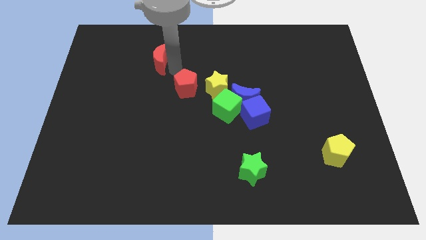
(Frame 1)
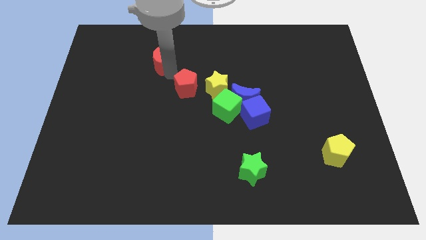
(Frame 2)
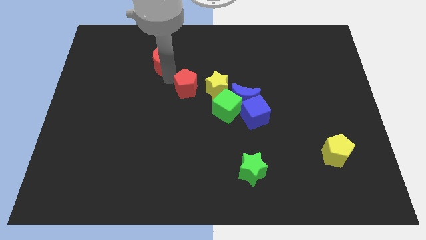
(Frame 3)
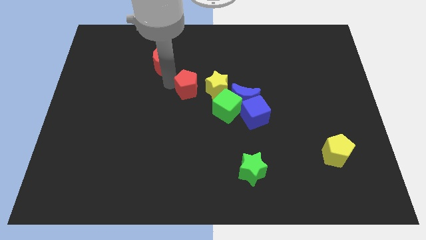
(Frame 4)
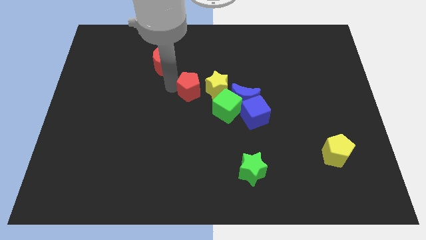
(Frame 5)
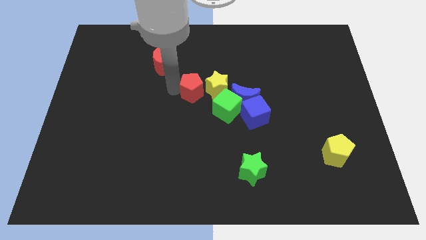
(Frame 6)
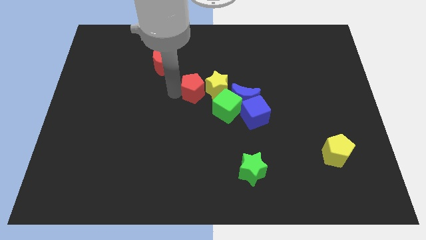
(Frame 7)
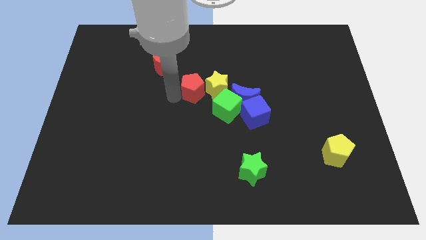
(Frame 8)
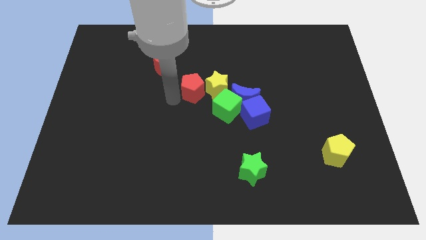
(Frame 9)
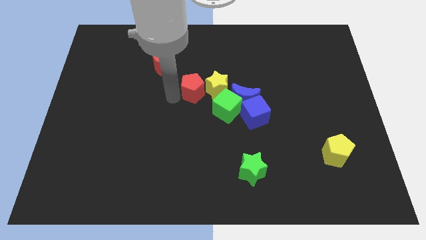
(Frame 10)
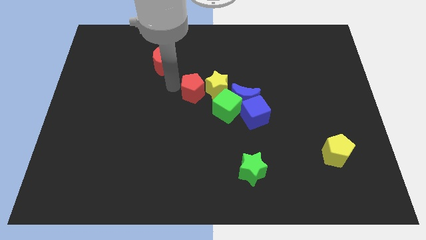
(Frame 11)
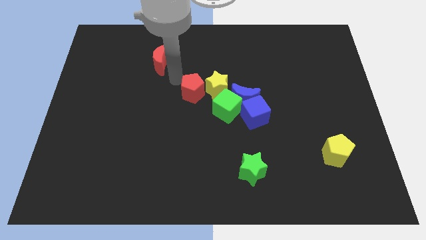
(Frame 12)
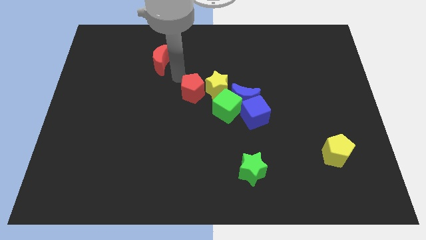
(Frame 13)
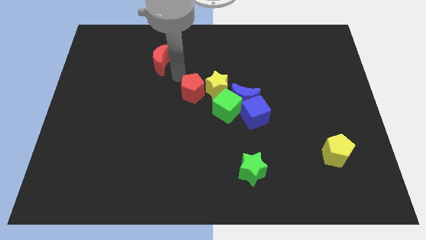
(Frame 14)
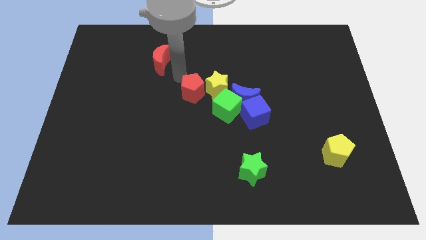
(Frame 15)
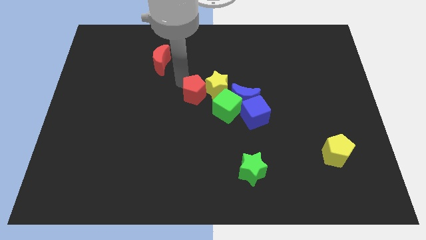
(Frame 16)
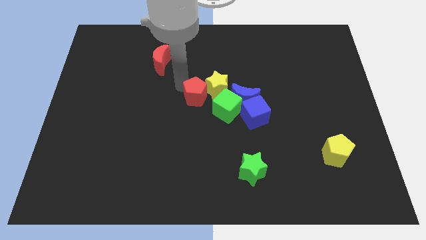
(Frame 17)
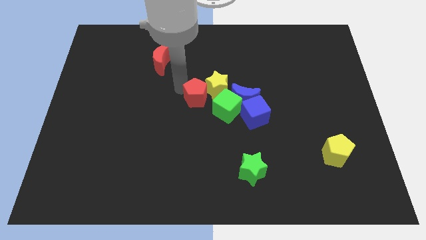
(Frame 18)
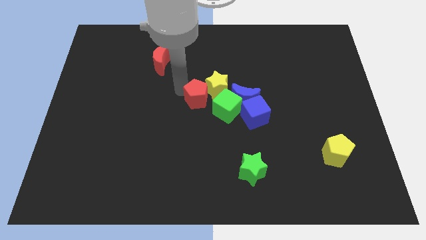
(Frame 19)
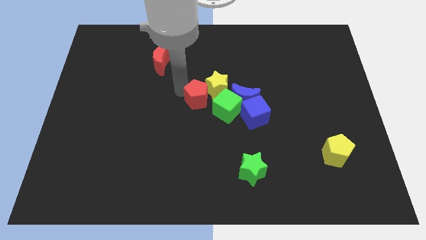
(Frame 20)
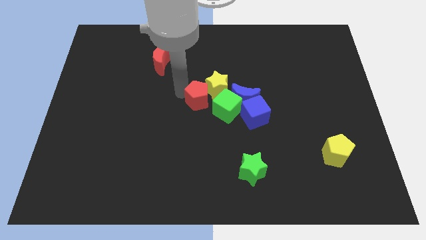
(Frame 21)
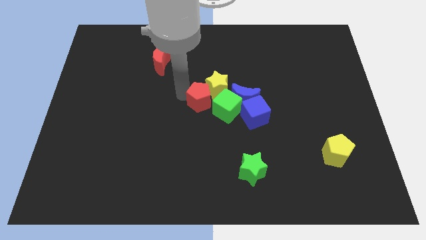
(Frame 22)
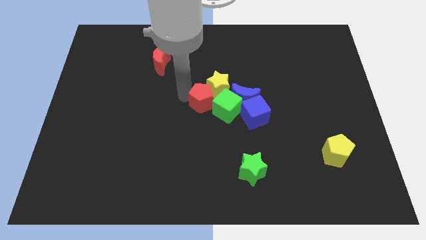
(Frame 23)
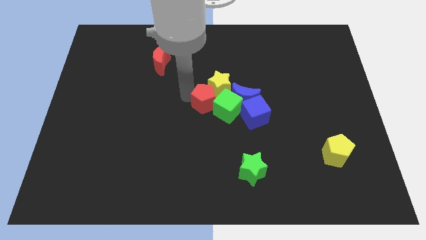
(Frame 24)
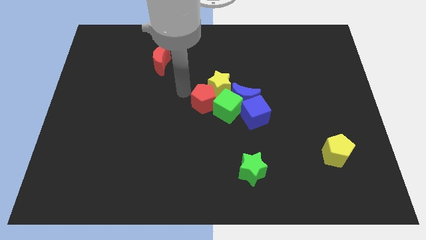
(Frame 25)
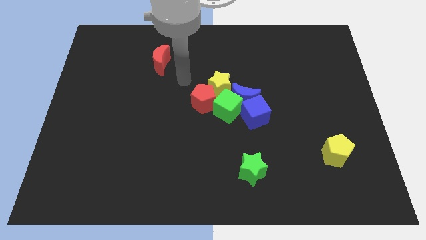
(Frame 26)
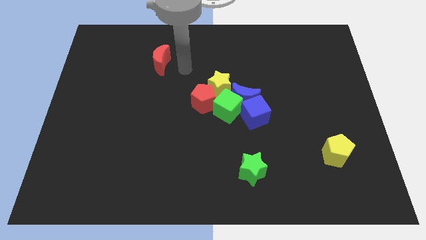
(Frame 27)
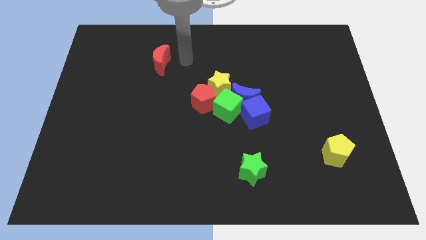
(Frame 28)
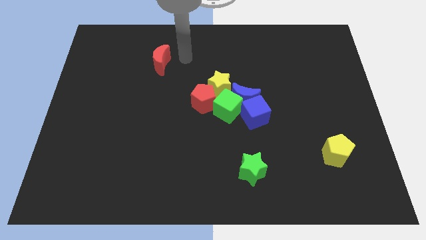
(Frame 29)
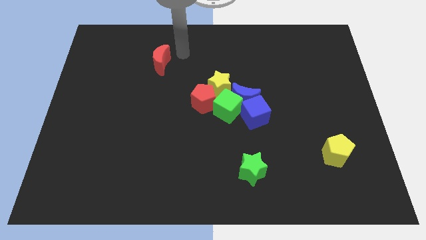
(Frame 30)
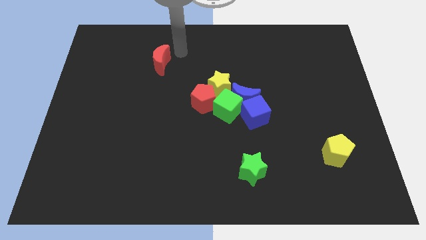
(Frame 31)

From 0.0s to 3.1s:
move the red pentagon to the center of the board

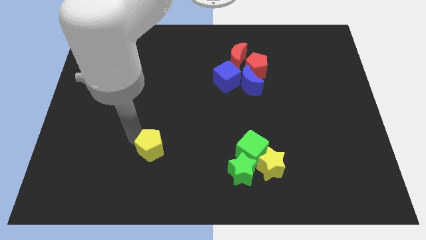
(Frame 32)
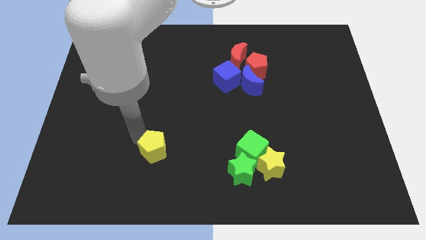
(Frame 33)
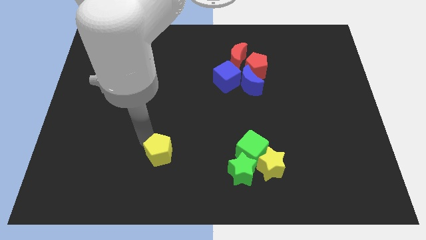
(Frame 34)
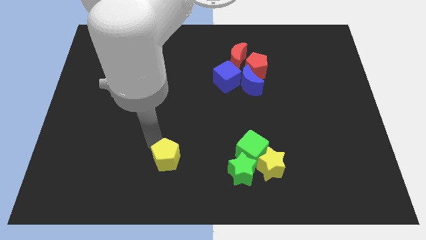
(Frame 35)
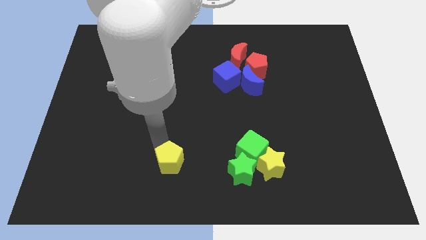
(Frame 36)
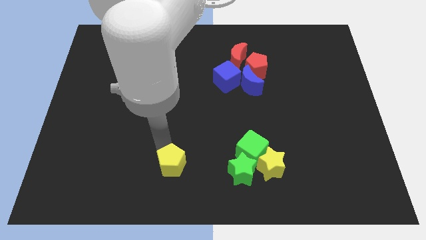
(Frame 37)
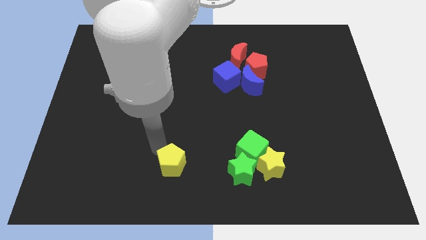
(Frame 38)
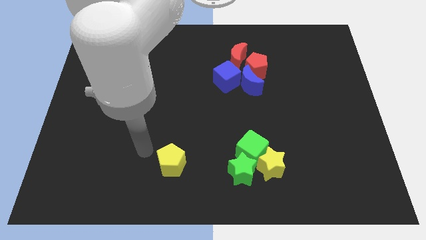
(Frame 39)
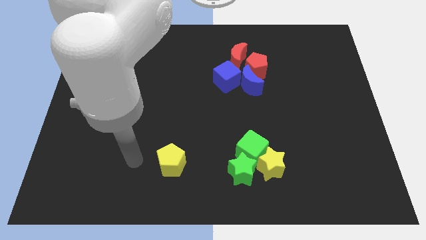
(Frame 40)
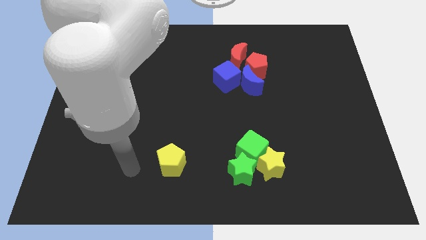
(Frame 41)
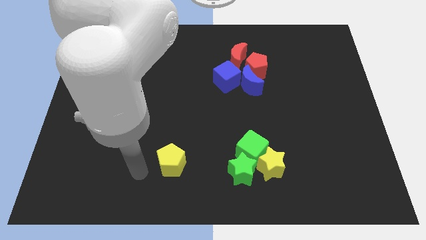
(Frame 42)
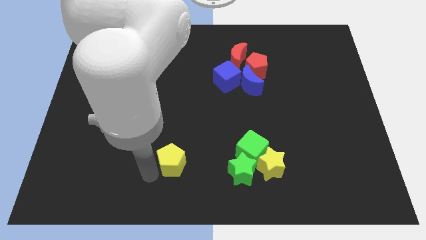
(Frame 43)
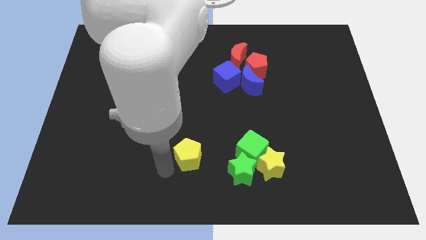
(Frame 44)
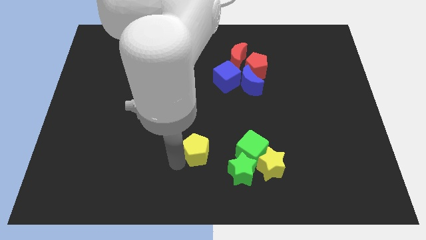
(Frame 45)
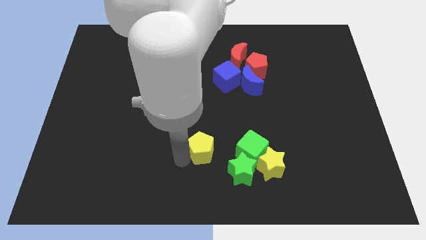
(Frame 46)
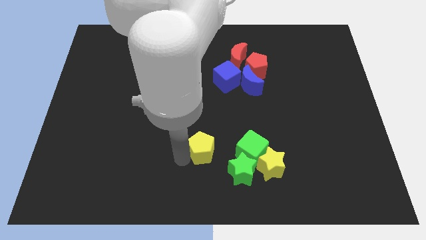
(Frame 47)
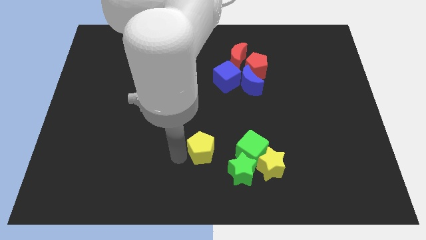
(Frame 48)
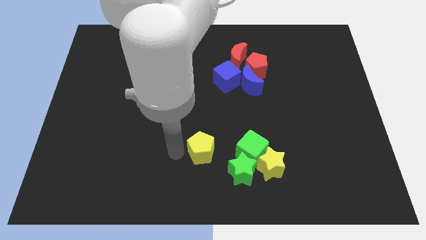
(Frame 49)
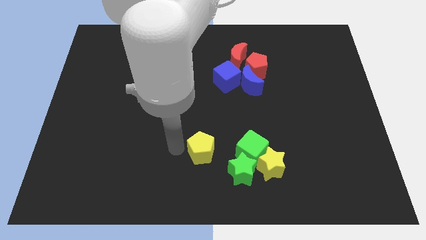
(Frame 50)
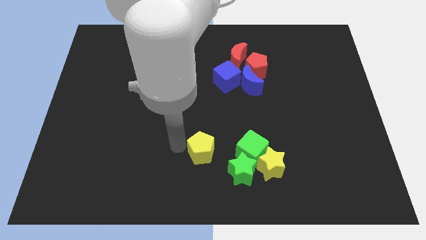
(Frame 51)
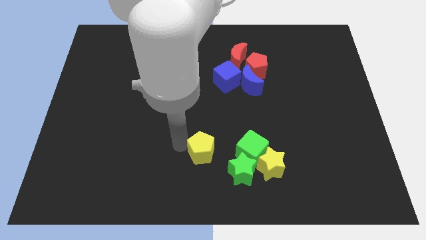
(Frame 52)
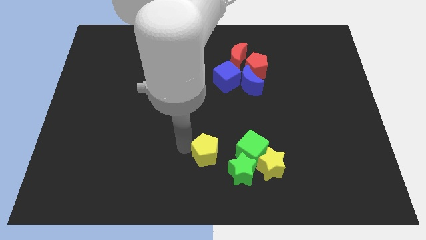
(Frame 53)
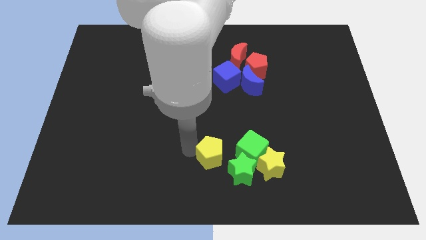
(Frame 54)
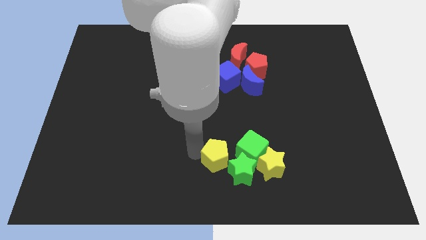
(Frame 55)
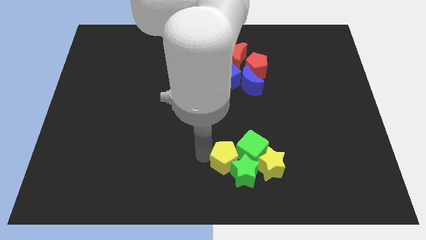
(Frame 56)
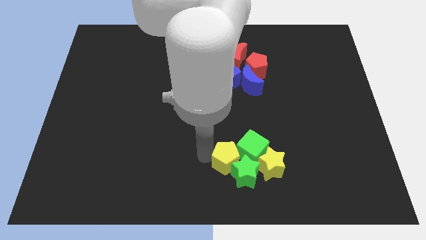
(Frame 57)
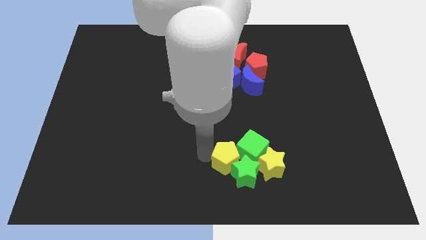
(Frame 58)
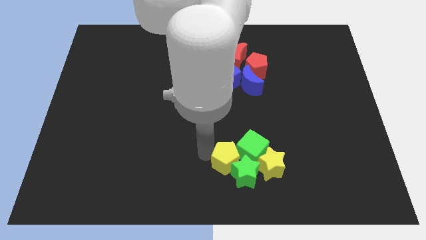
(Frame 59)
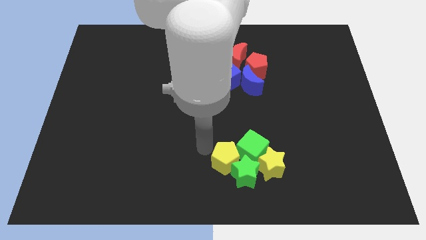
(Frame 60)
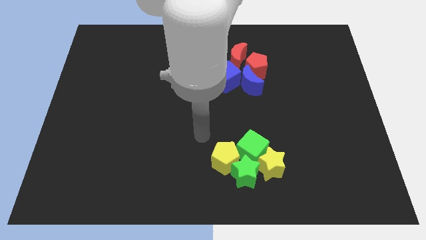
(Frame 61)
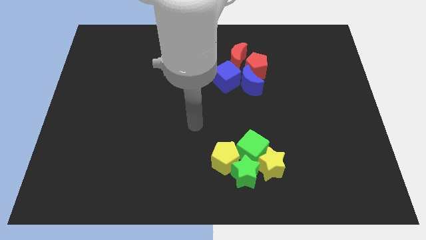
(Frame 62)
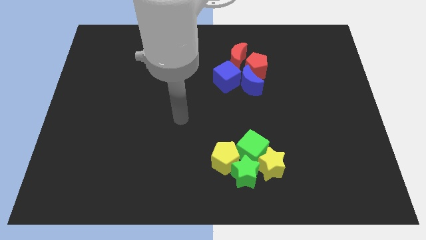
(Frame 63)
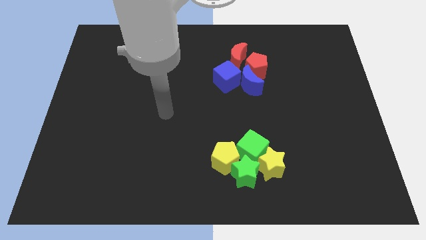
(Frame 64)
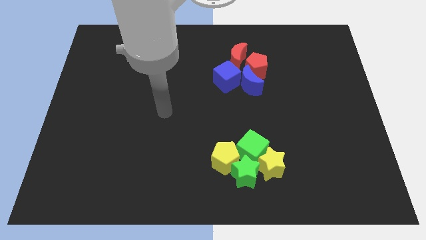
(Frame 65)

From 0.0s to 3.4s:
push yellow pentagon into the group of blocks

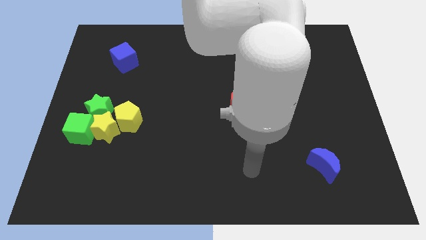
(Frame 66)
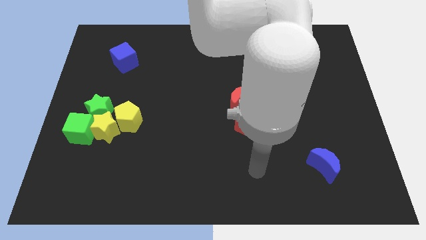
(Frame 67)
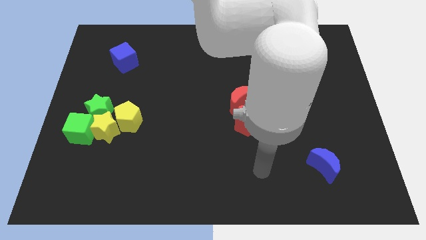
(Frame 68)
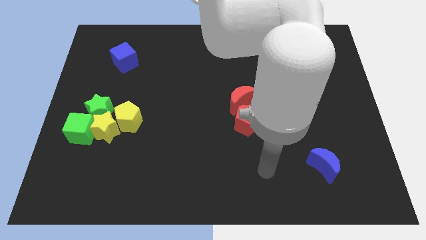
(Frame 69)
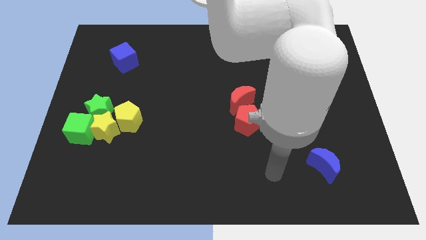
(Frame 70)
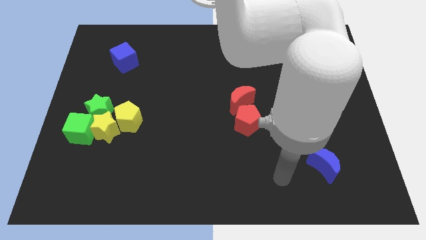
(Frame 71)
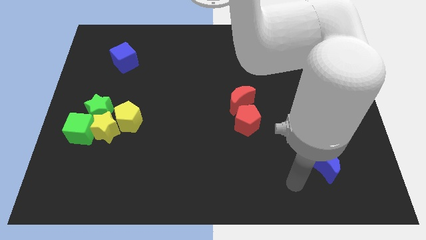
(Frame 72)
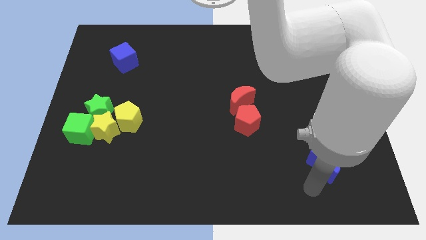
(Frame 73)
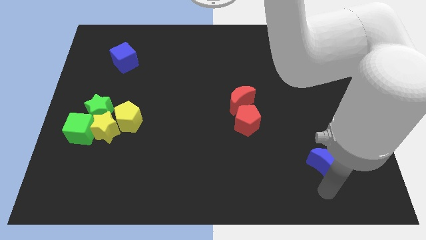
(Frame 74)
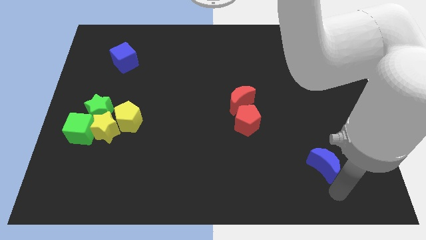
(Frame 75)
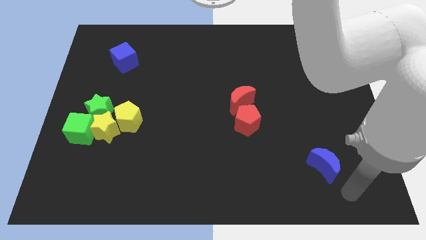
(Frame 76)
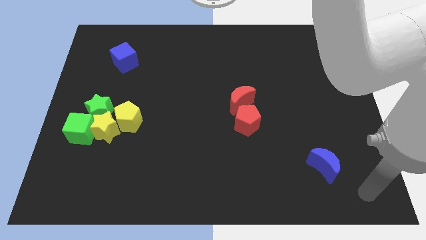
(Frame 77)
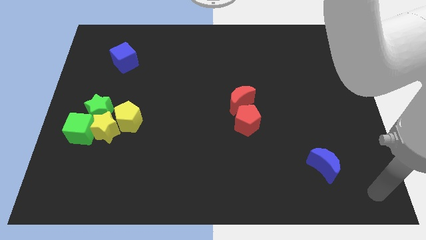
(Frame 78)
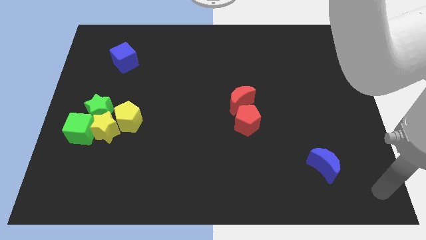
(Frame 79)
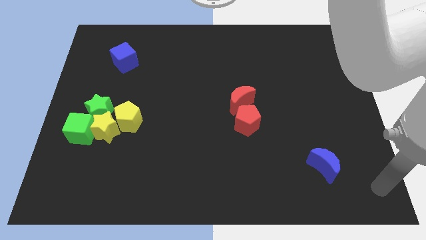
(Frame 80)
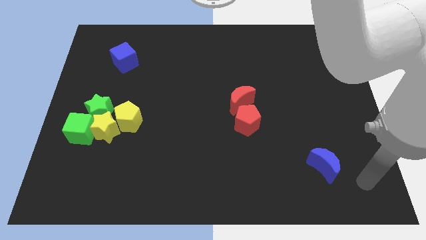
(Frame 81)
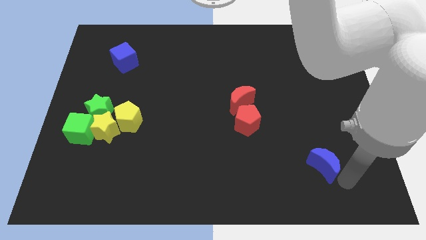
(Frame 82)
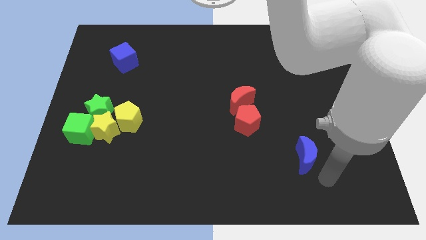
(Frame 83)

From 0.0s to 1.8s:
slightly push the blue crescent

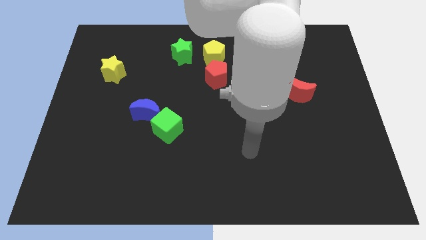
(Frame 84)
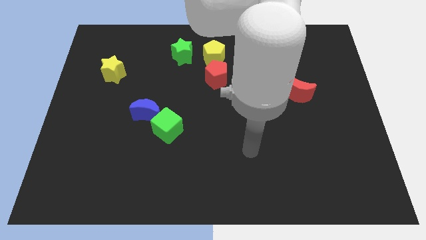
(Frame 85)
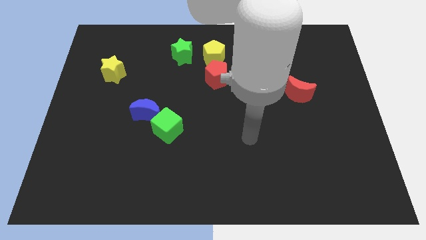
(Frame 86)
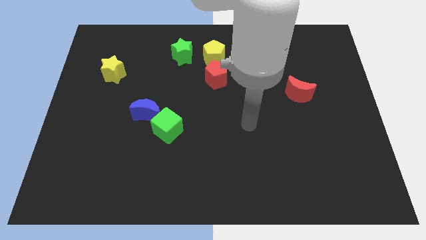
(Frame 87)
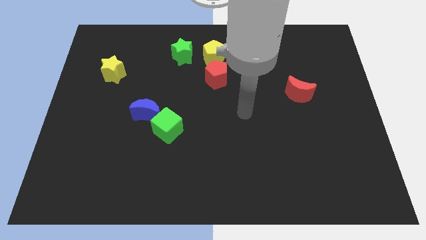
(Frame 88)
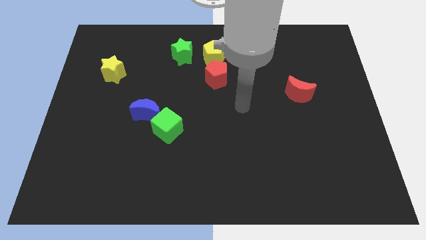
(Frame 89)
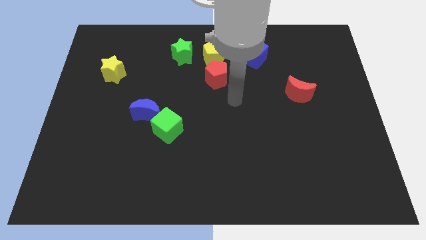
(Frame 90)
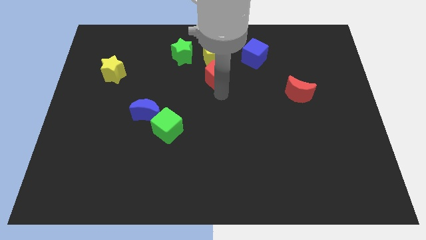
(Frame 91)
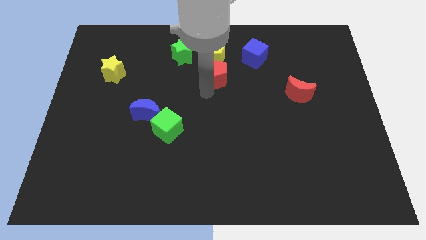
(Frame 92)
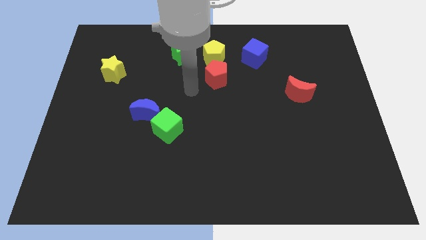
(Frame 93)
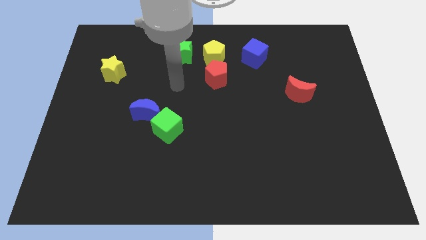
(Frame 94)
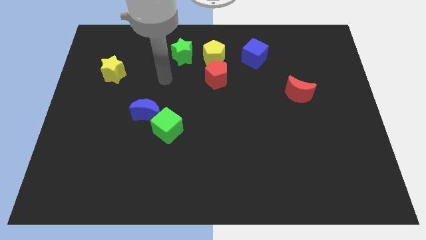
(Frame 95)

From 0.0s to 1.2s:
place the arm towards the green star
